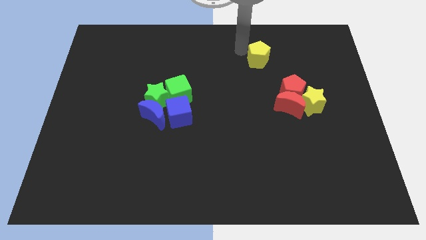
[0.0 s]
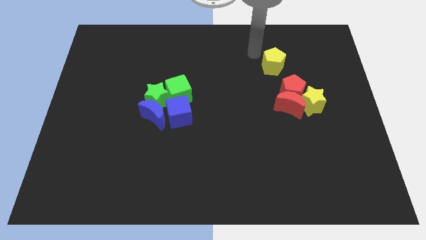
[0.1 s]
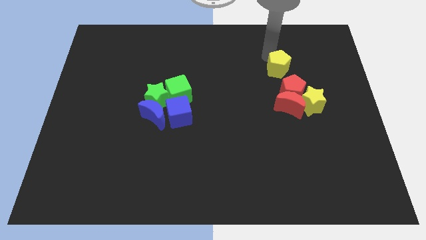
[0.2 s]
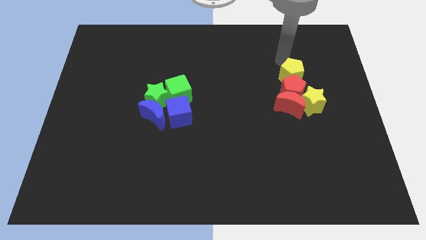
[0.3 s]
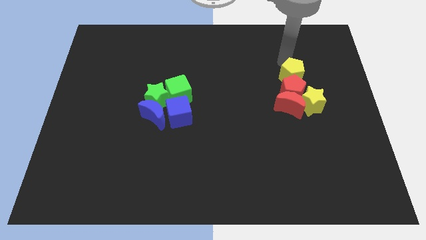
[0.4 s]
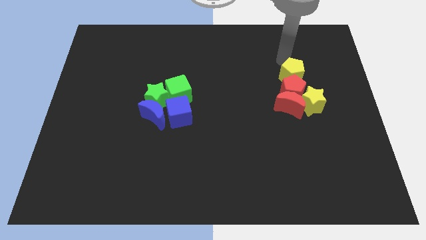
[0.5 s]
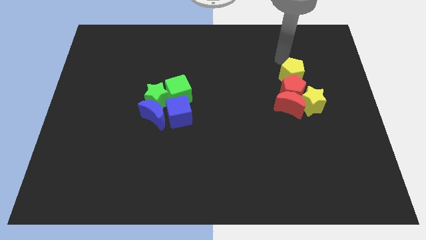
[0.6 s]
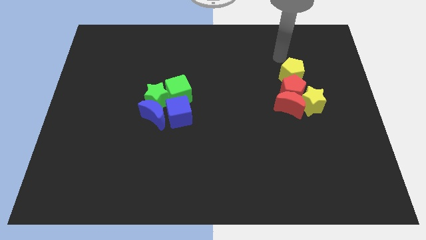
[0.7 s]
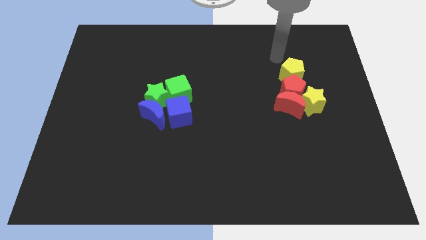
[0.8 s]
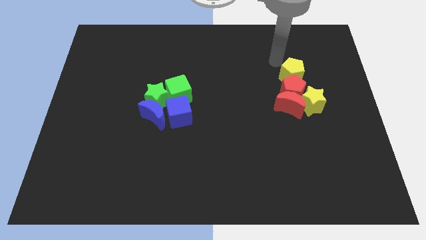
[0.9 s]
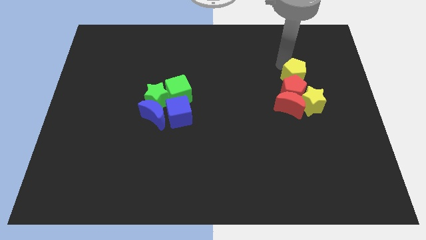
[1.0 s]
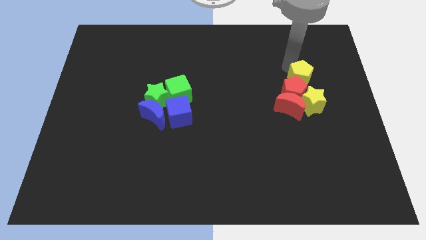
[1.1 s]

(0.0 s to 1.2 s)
place the yellow pentagon above the red pentagon

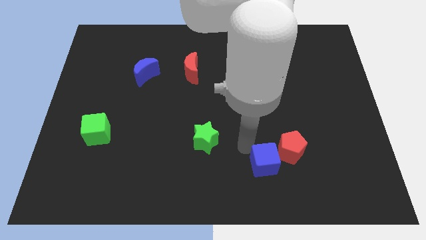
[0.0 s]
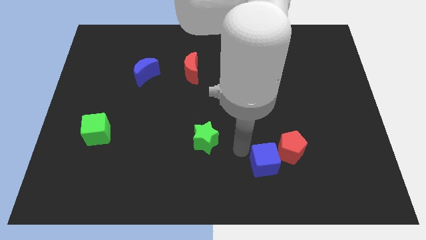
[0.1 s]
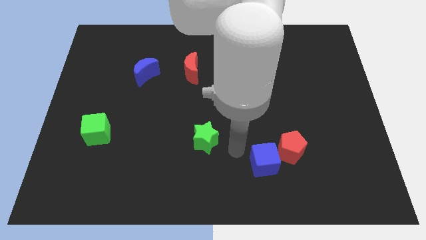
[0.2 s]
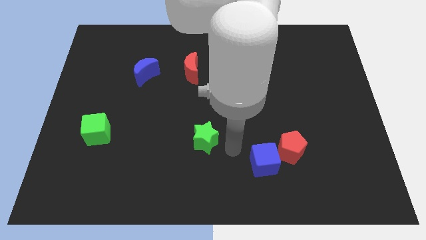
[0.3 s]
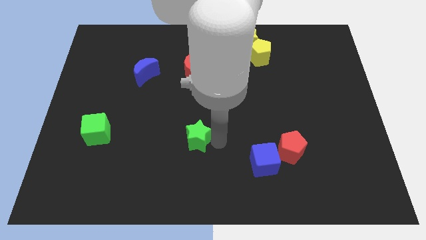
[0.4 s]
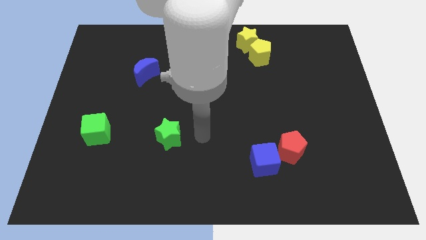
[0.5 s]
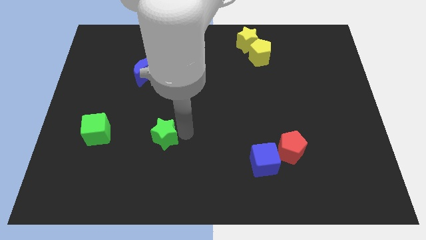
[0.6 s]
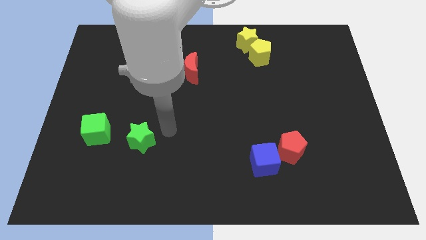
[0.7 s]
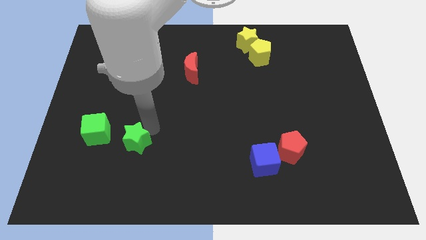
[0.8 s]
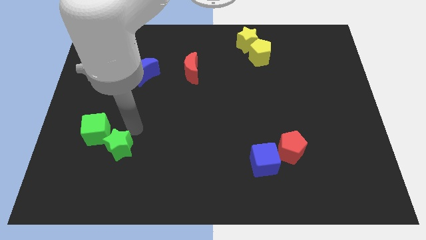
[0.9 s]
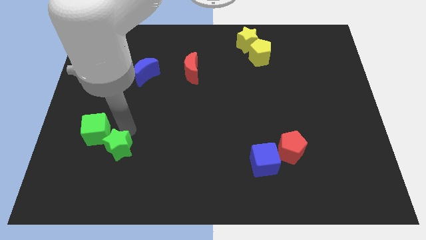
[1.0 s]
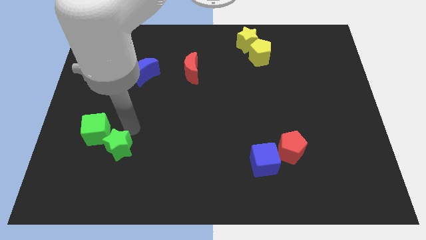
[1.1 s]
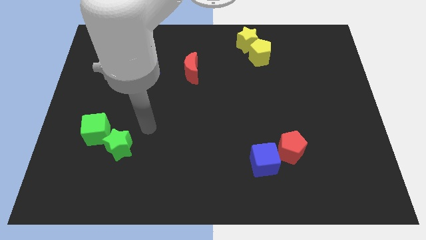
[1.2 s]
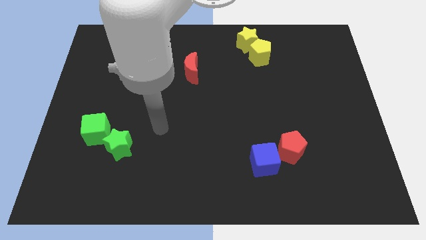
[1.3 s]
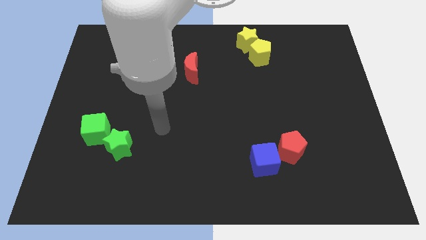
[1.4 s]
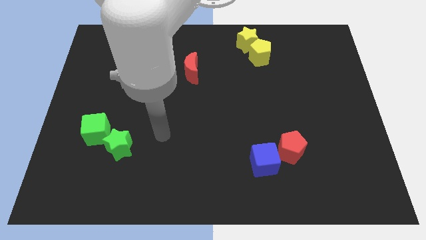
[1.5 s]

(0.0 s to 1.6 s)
place the green star diagonally bottom right to the green cube

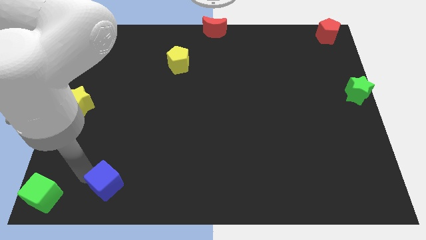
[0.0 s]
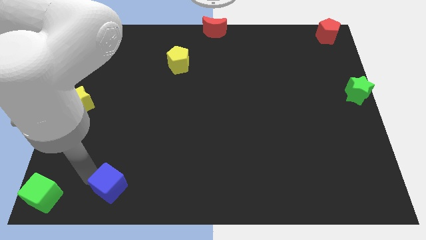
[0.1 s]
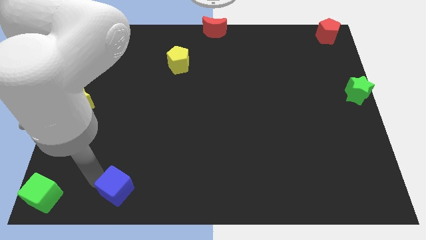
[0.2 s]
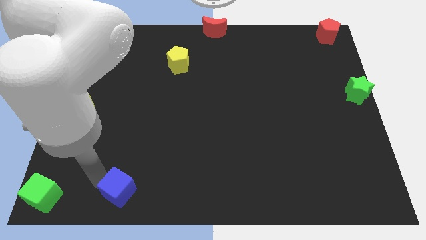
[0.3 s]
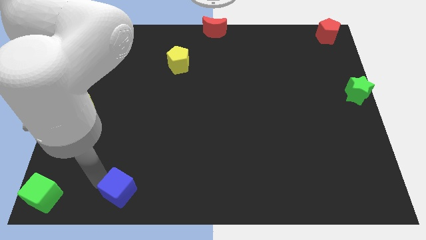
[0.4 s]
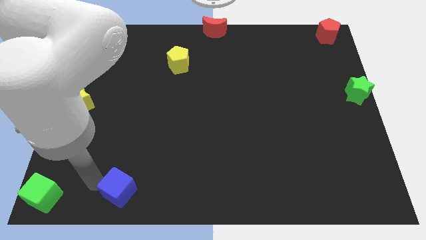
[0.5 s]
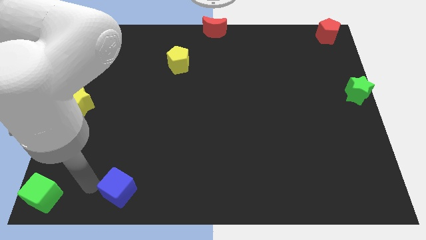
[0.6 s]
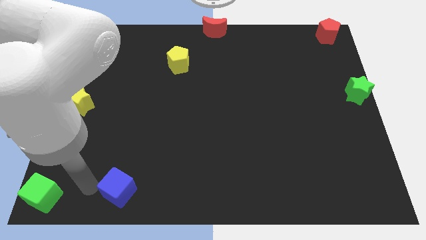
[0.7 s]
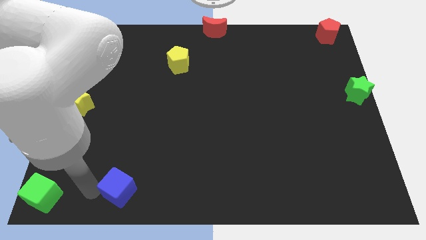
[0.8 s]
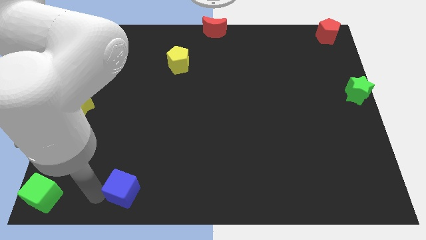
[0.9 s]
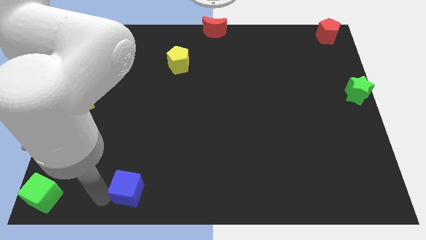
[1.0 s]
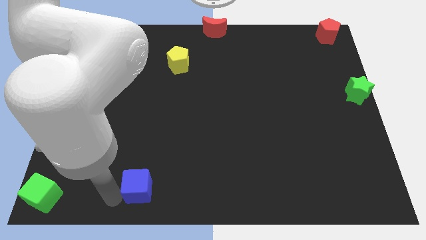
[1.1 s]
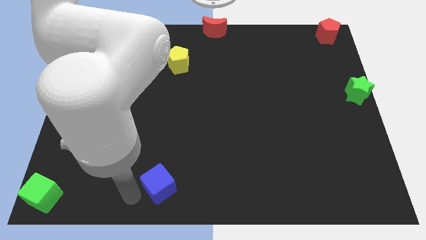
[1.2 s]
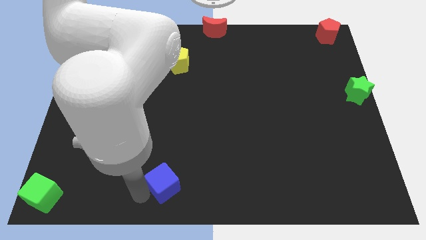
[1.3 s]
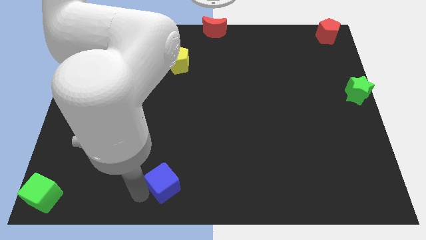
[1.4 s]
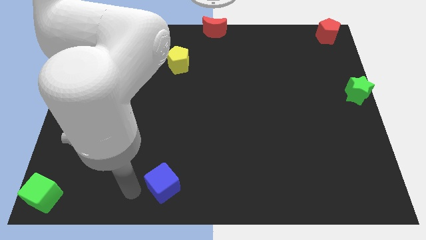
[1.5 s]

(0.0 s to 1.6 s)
drag the blue cube towards the bottom center of the board

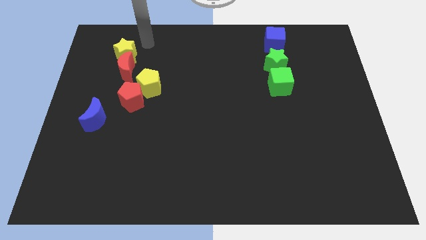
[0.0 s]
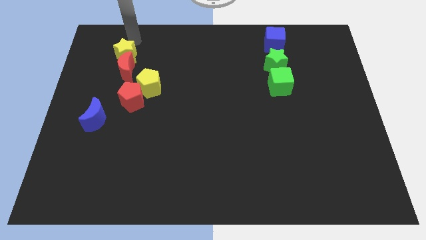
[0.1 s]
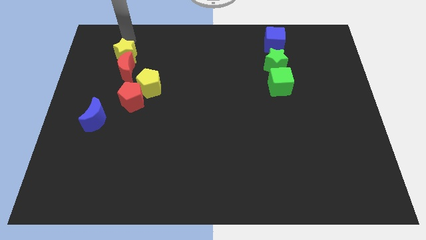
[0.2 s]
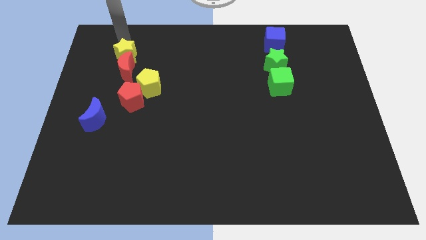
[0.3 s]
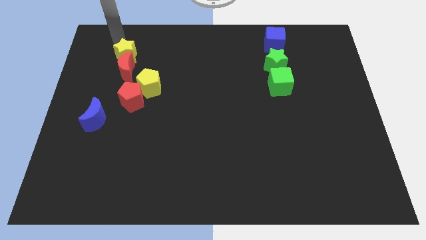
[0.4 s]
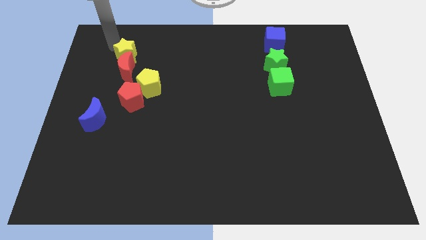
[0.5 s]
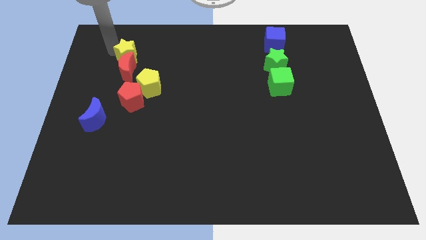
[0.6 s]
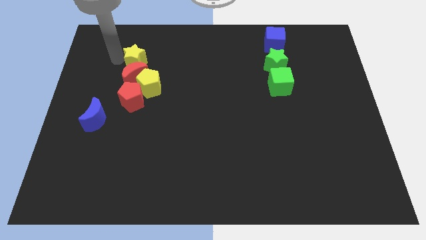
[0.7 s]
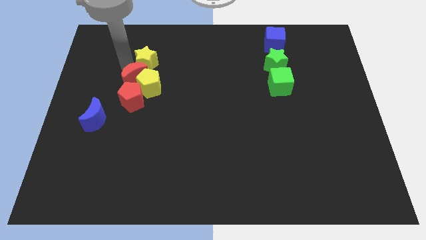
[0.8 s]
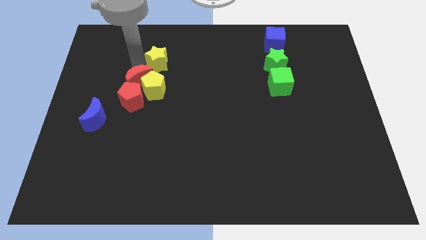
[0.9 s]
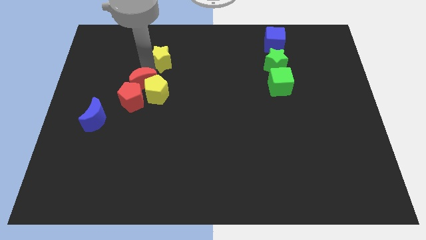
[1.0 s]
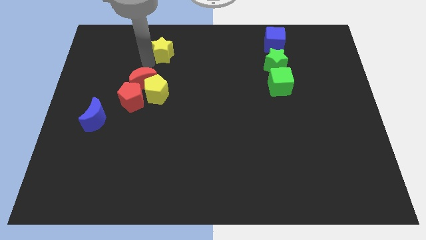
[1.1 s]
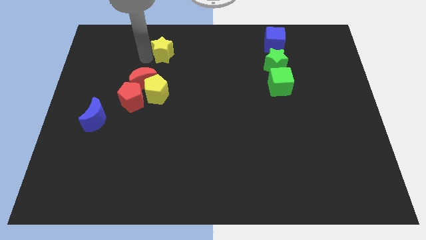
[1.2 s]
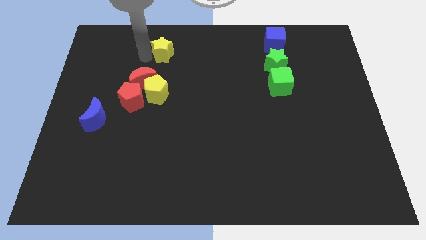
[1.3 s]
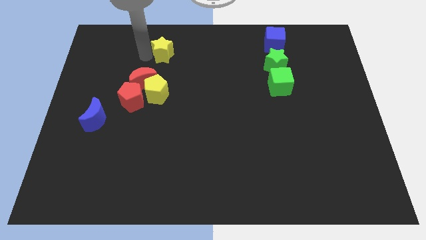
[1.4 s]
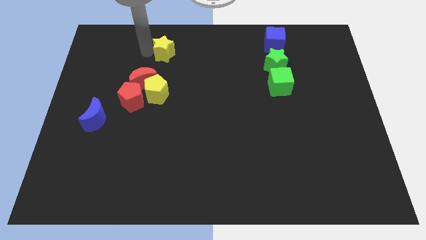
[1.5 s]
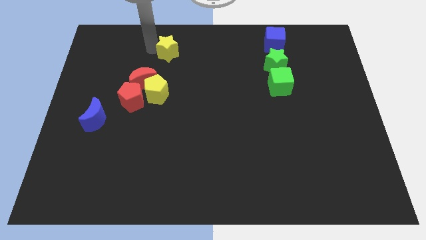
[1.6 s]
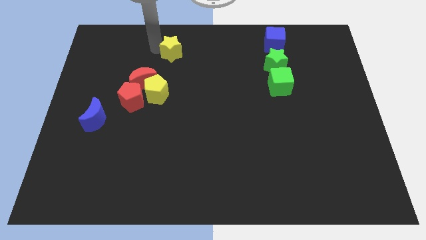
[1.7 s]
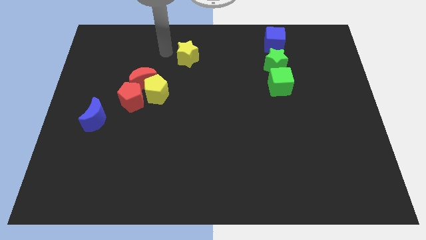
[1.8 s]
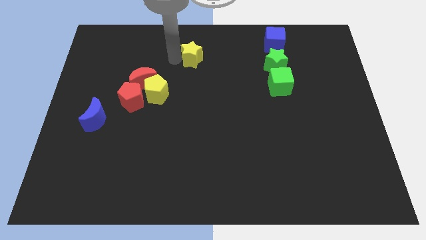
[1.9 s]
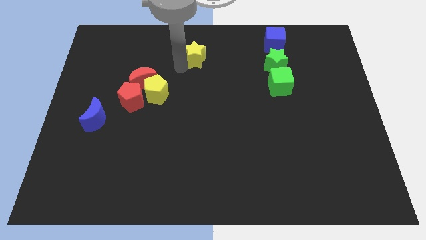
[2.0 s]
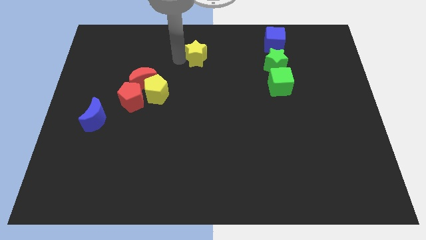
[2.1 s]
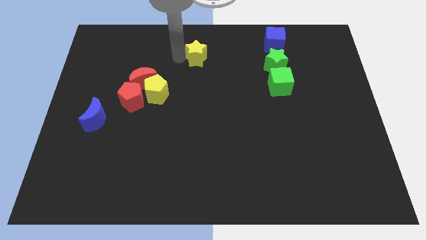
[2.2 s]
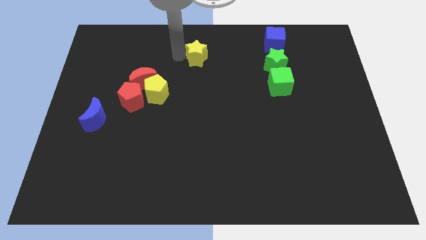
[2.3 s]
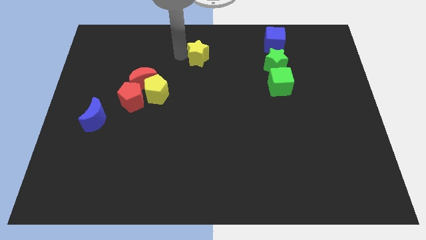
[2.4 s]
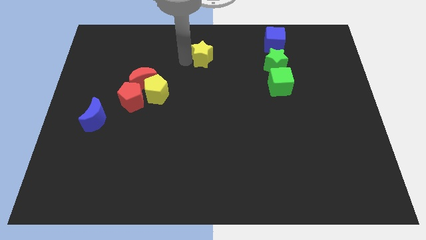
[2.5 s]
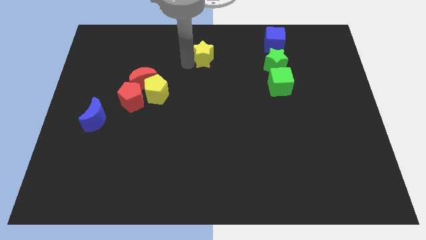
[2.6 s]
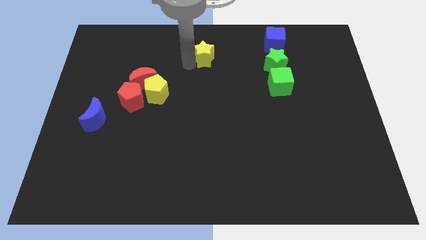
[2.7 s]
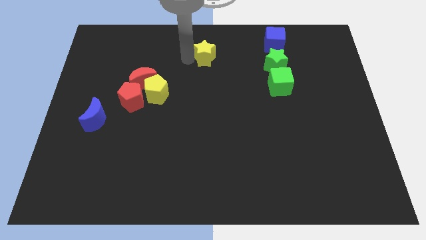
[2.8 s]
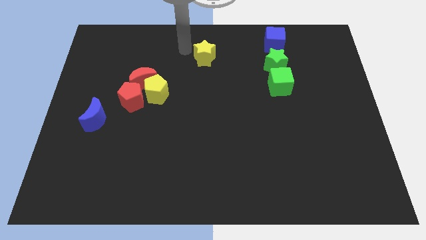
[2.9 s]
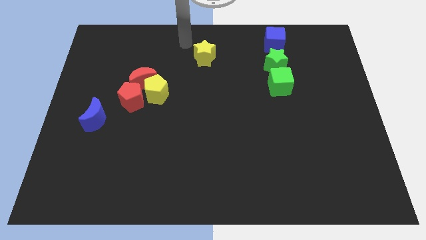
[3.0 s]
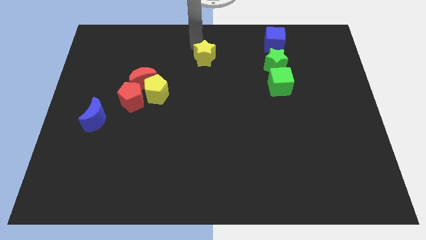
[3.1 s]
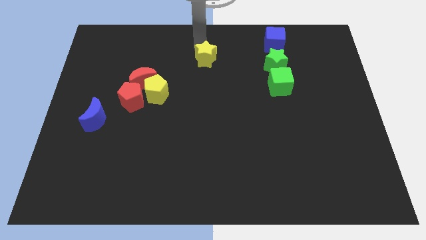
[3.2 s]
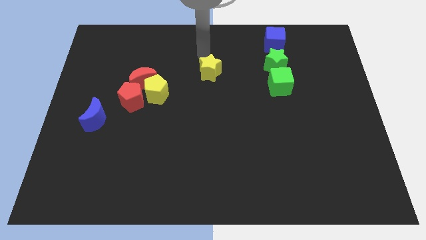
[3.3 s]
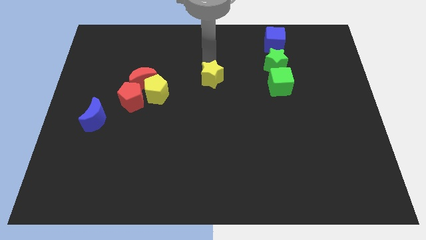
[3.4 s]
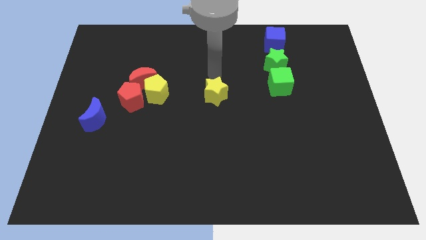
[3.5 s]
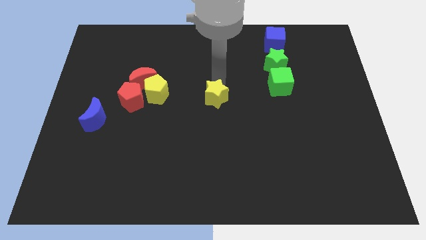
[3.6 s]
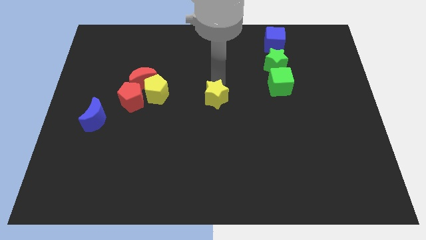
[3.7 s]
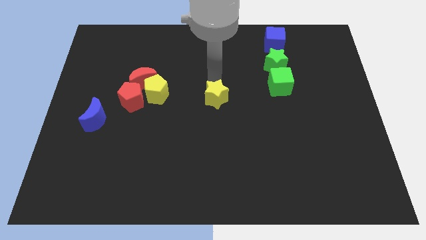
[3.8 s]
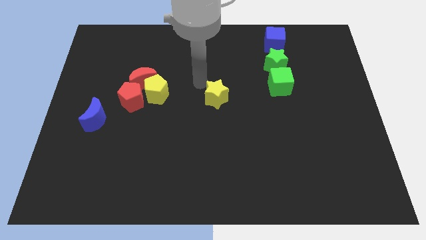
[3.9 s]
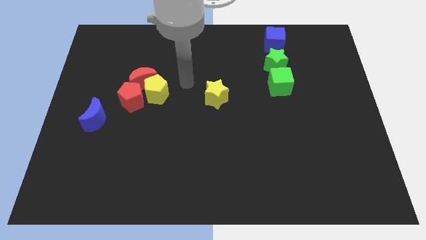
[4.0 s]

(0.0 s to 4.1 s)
separate yellow star from red moon

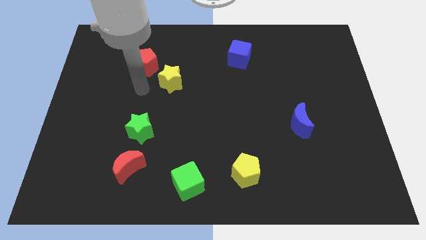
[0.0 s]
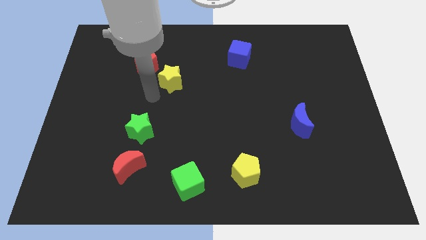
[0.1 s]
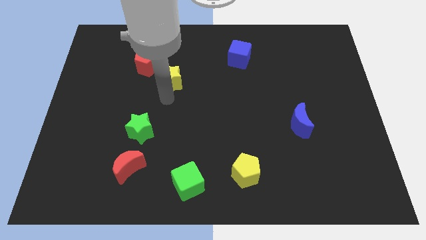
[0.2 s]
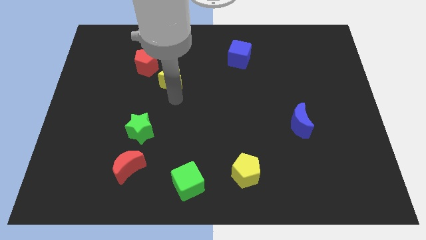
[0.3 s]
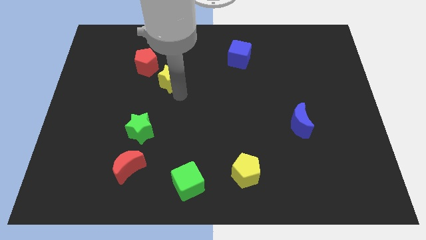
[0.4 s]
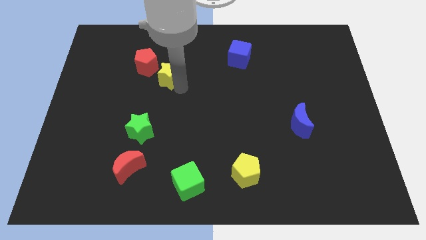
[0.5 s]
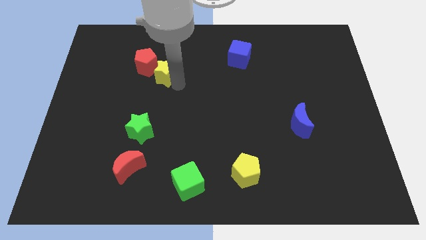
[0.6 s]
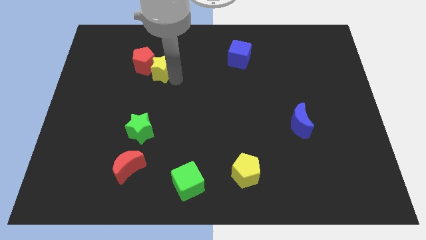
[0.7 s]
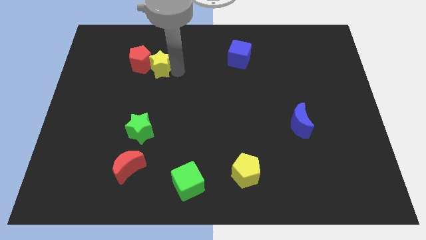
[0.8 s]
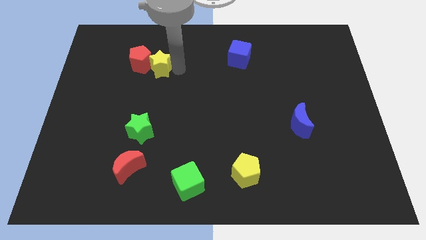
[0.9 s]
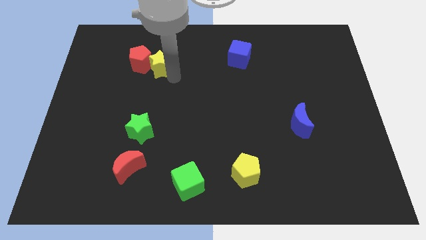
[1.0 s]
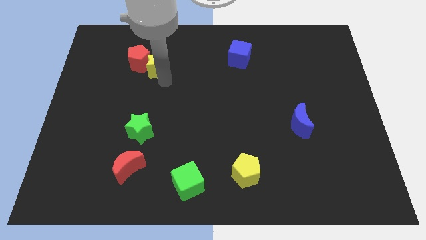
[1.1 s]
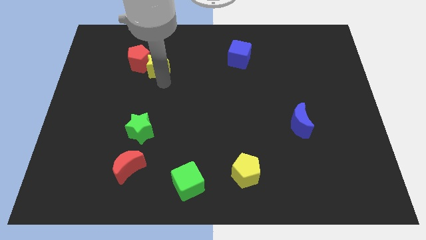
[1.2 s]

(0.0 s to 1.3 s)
place the red pentagon and yellow star towards the top left corner of the board
